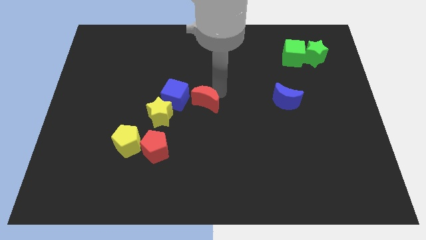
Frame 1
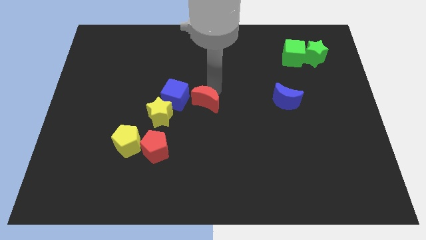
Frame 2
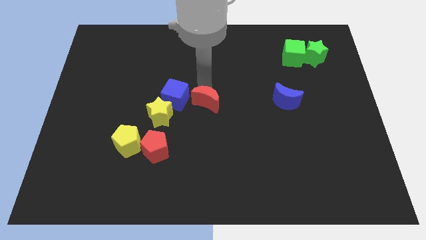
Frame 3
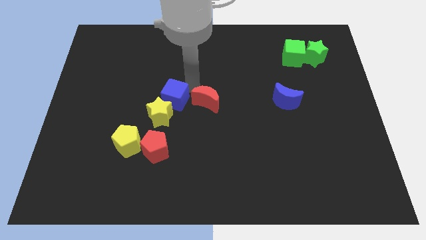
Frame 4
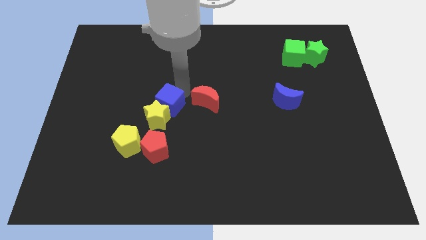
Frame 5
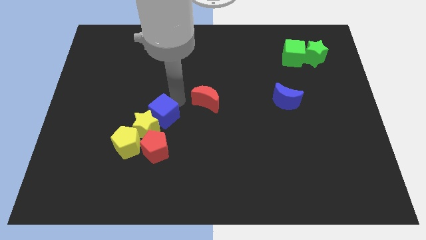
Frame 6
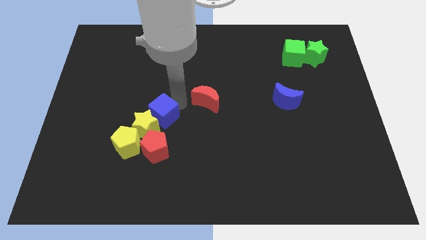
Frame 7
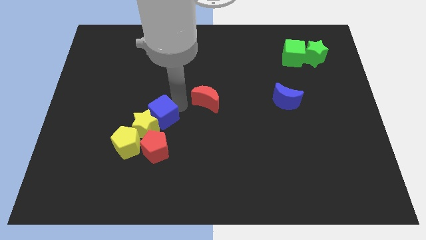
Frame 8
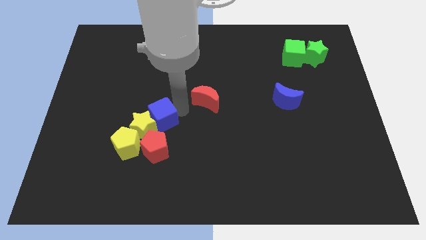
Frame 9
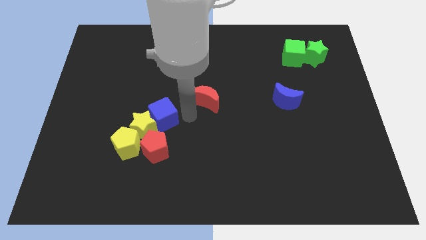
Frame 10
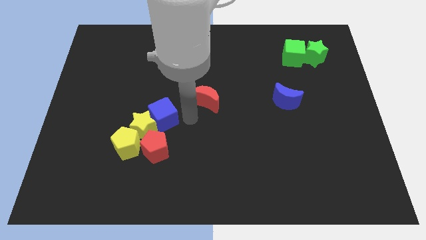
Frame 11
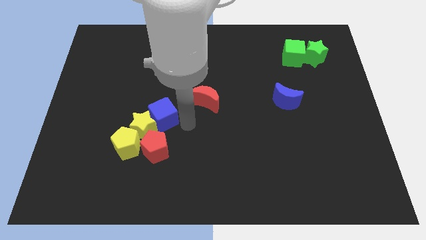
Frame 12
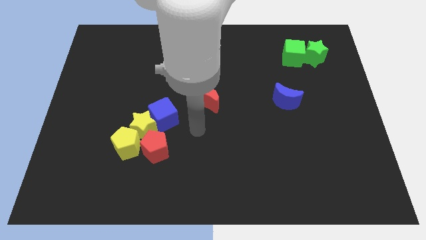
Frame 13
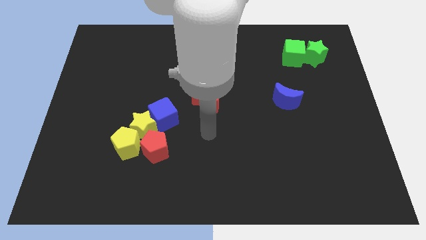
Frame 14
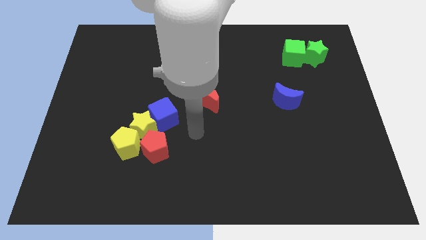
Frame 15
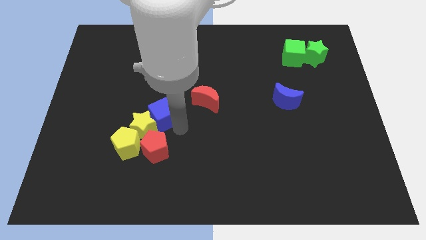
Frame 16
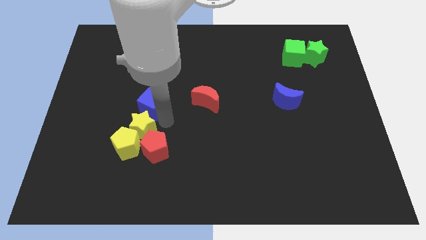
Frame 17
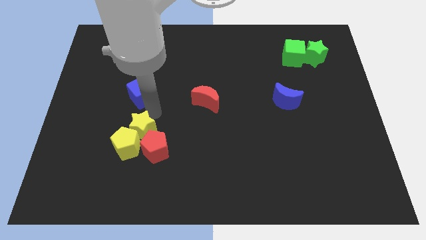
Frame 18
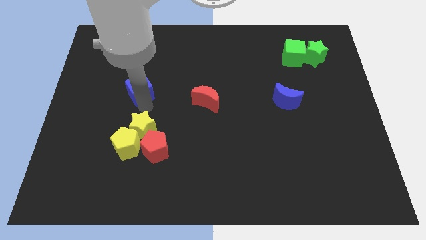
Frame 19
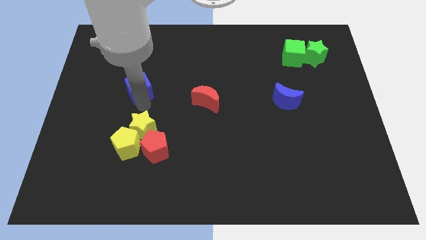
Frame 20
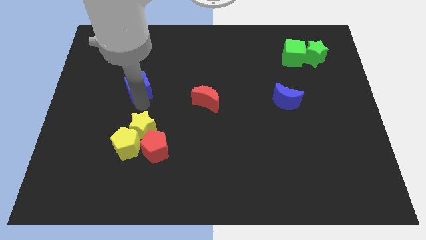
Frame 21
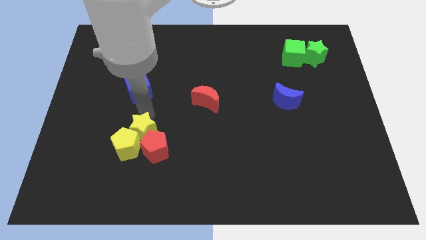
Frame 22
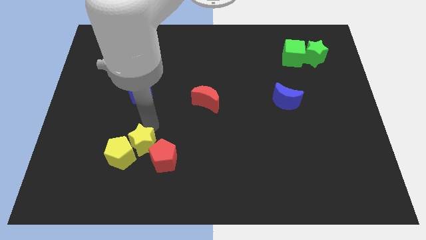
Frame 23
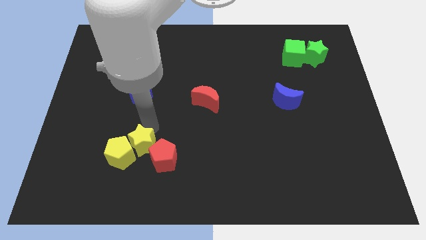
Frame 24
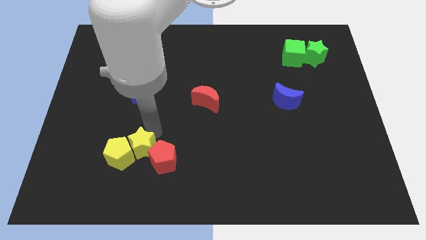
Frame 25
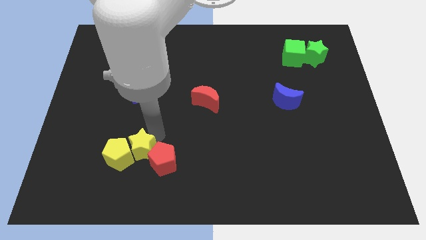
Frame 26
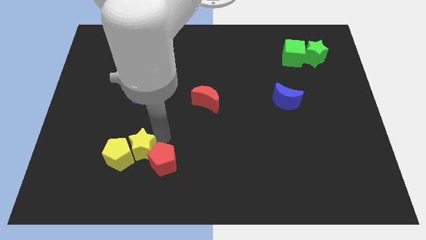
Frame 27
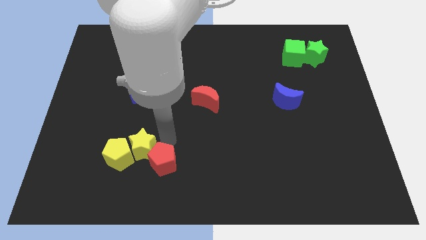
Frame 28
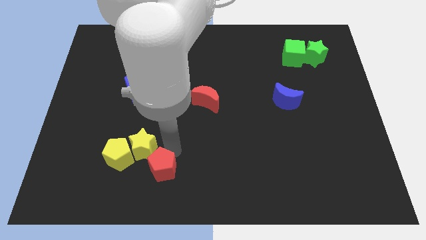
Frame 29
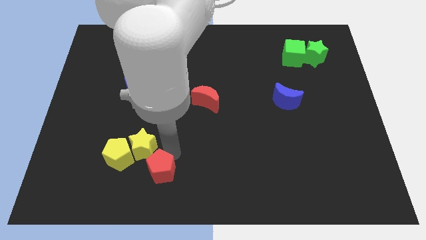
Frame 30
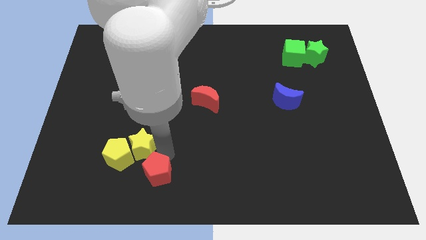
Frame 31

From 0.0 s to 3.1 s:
separate the red crescent and the blue cube from the group of blocks

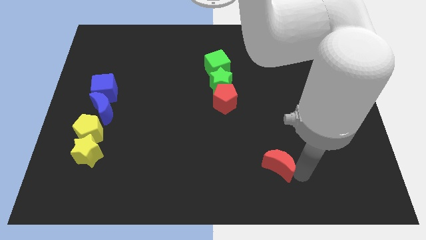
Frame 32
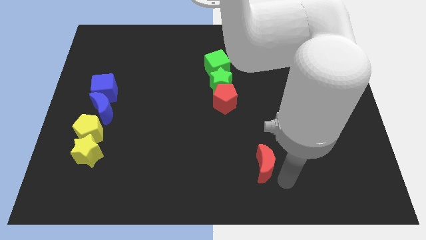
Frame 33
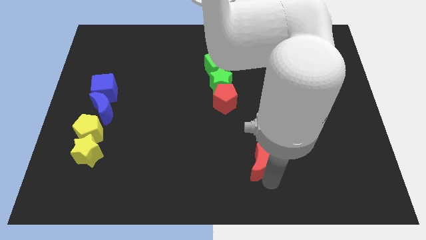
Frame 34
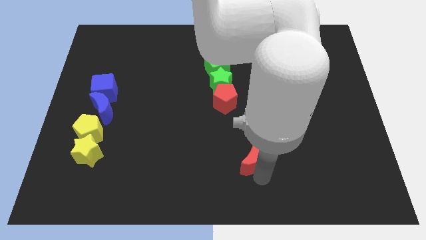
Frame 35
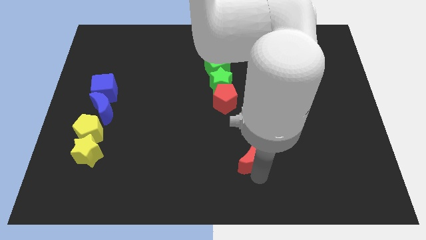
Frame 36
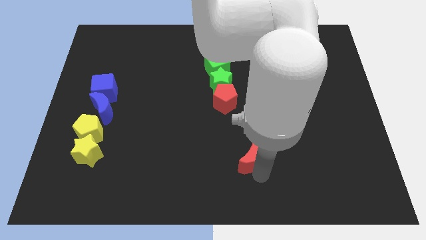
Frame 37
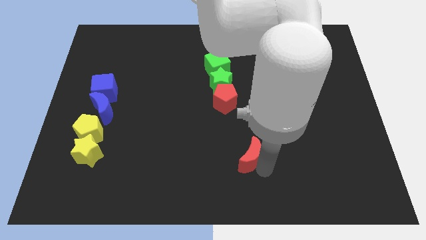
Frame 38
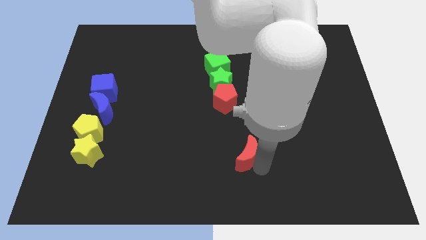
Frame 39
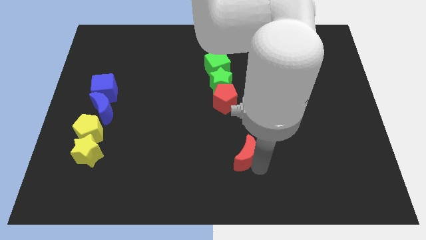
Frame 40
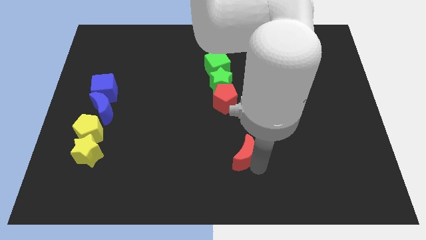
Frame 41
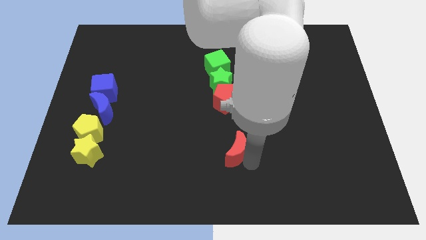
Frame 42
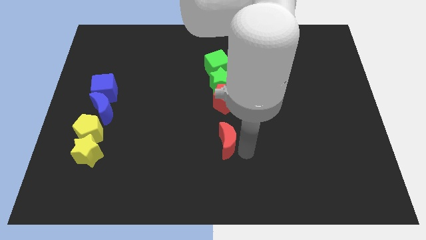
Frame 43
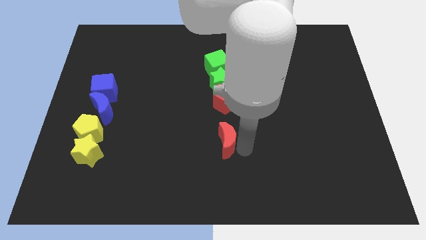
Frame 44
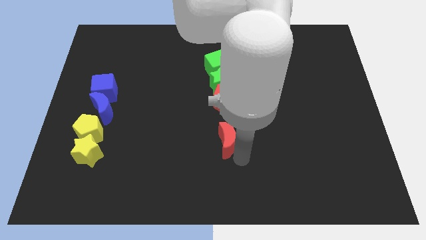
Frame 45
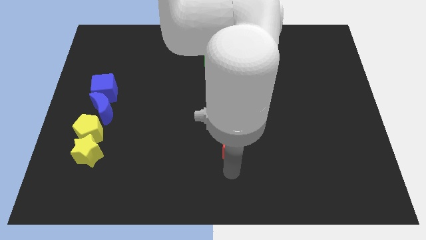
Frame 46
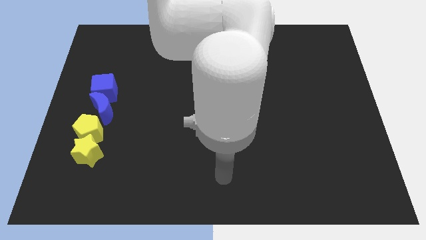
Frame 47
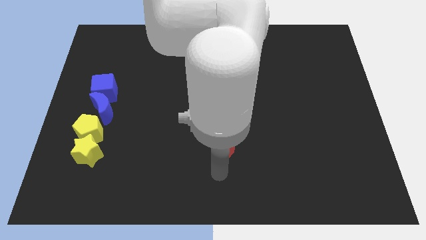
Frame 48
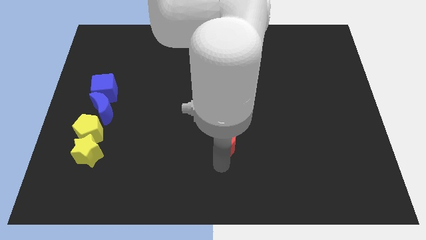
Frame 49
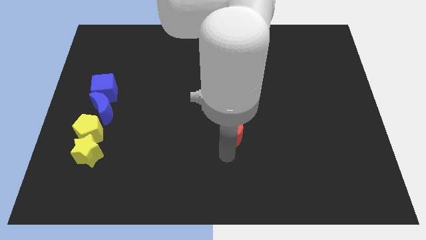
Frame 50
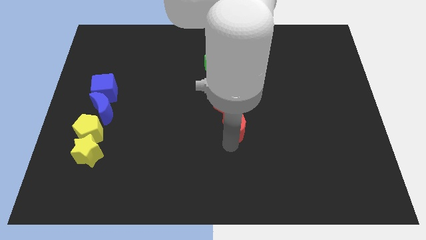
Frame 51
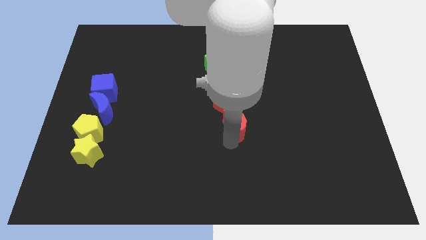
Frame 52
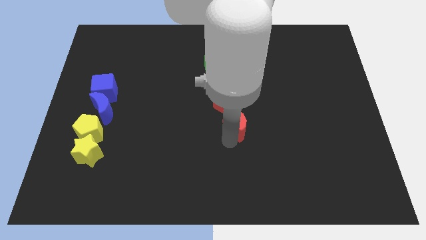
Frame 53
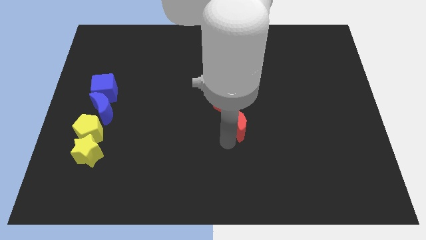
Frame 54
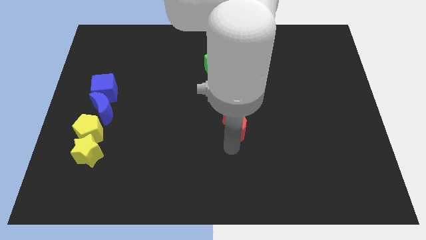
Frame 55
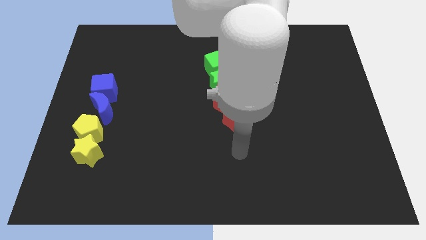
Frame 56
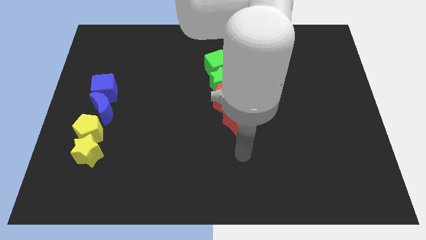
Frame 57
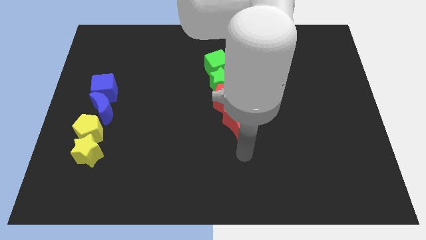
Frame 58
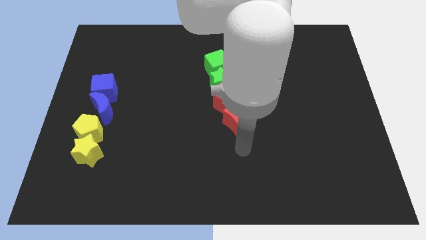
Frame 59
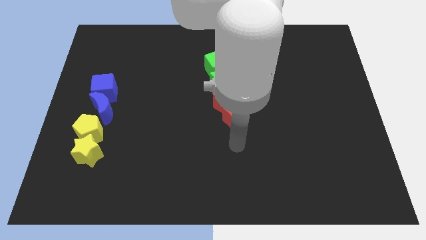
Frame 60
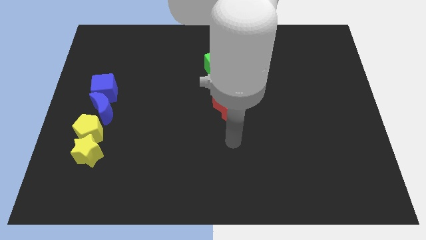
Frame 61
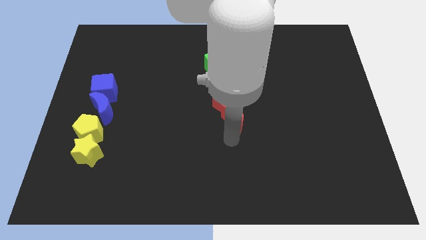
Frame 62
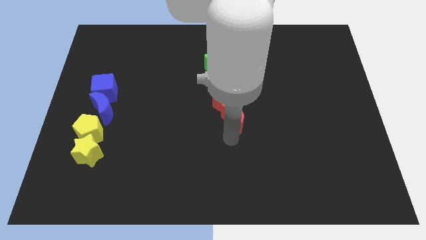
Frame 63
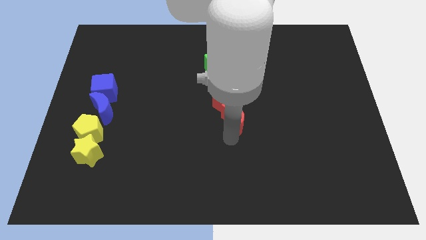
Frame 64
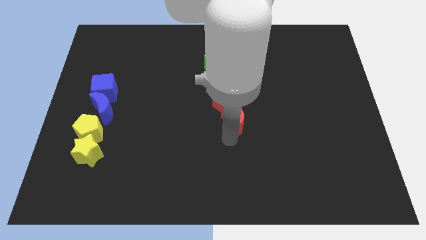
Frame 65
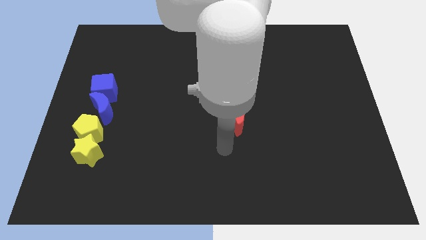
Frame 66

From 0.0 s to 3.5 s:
place the red crescent to the bottom of red pentagon

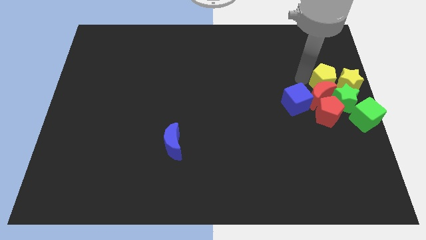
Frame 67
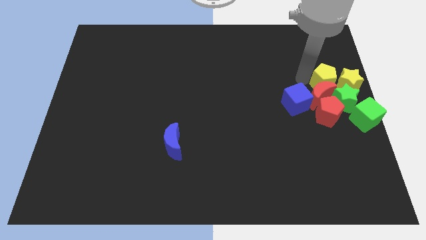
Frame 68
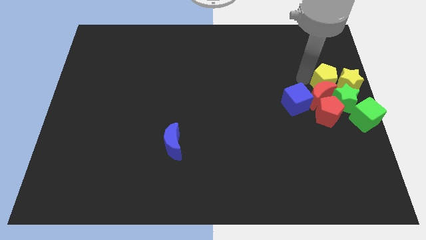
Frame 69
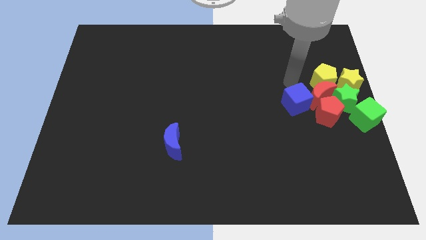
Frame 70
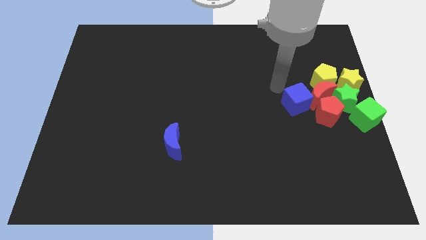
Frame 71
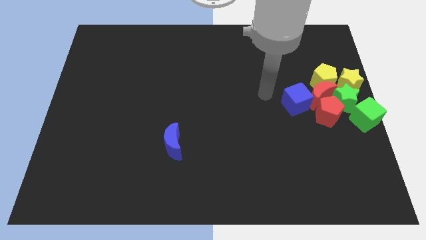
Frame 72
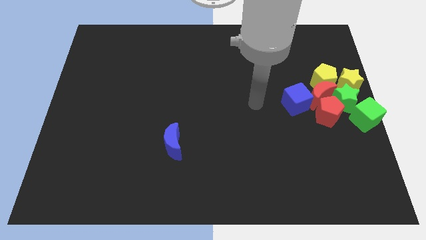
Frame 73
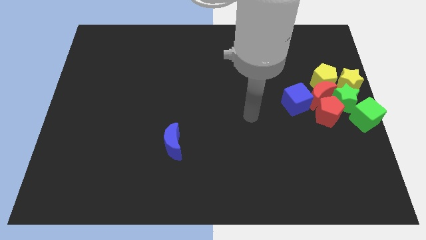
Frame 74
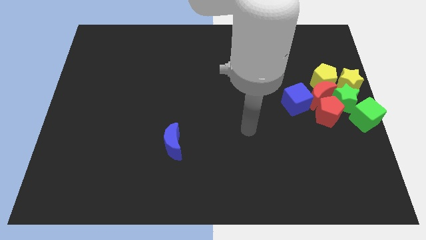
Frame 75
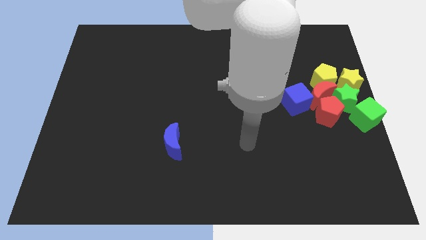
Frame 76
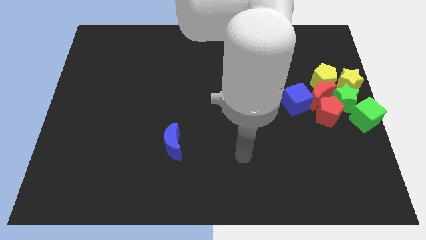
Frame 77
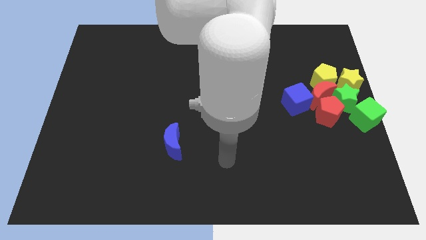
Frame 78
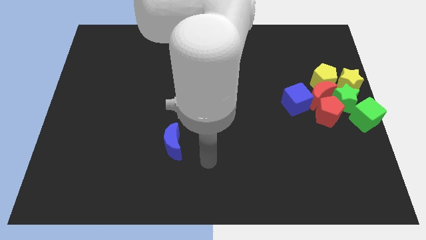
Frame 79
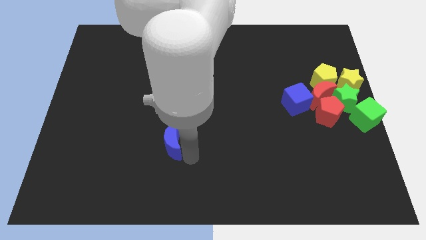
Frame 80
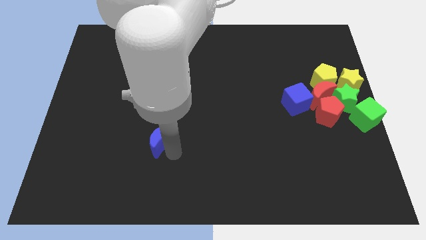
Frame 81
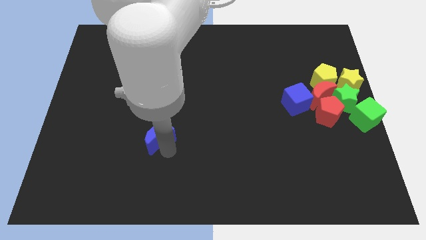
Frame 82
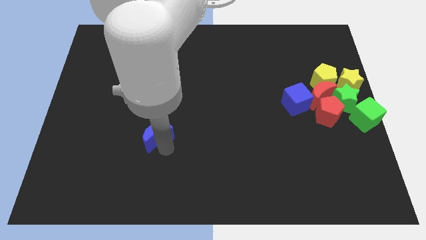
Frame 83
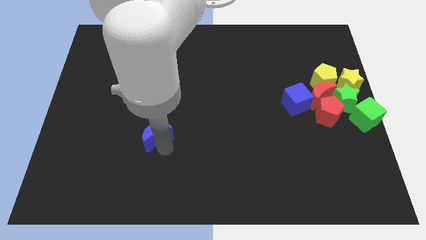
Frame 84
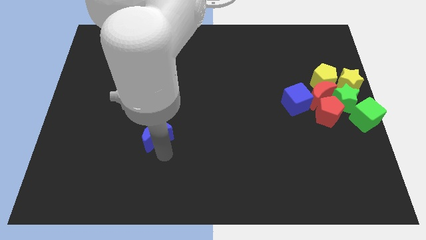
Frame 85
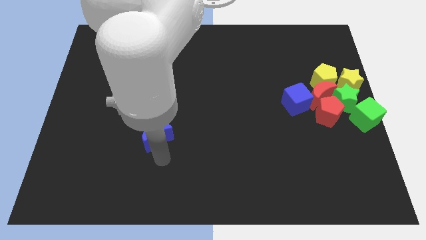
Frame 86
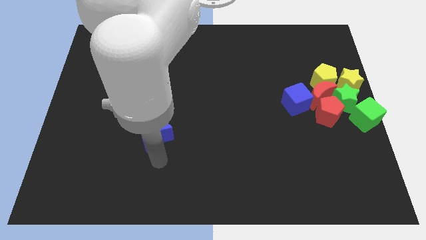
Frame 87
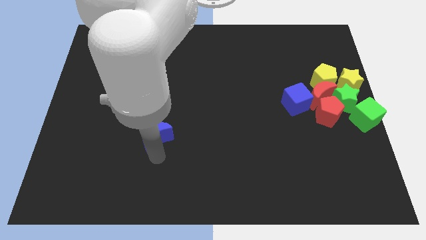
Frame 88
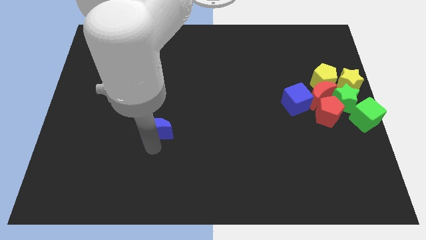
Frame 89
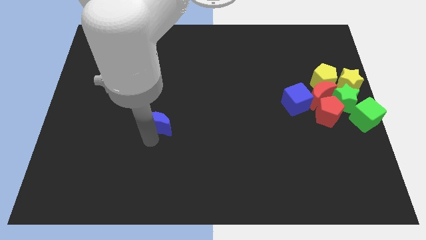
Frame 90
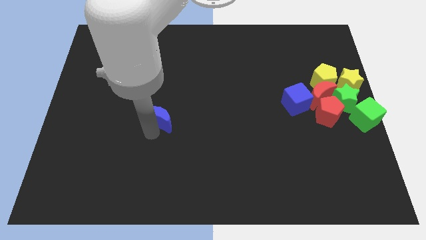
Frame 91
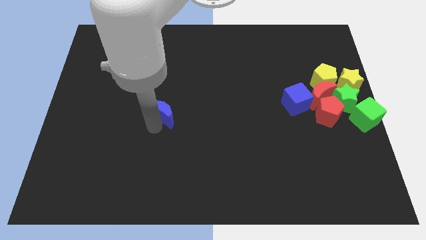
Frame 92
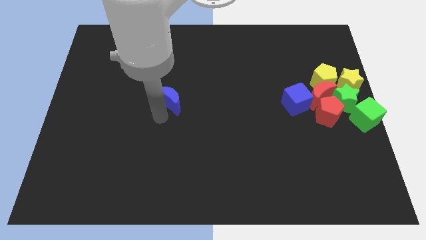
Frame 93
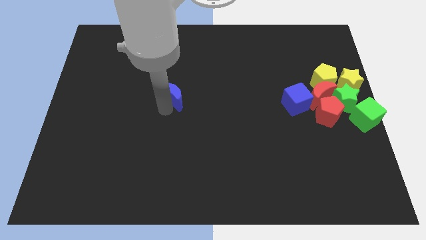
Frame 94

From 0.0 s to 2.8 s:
move the arm away from the yellow pentagon
